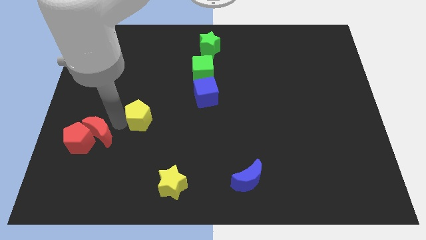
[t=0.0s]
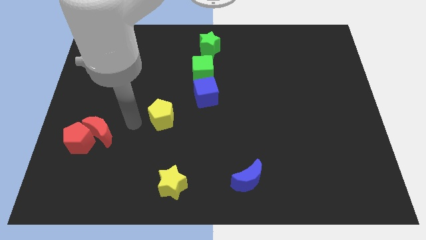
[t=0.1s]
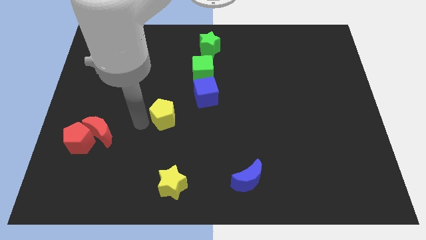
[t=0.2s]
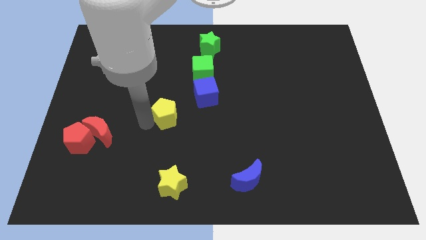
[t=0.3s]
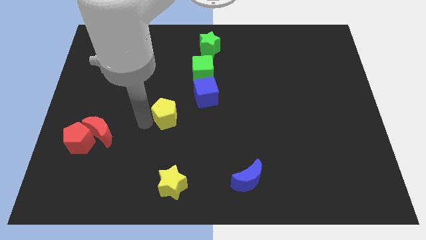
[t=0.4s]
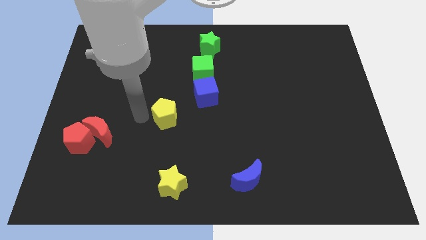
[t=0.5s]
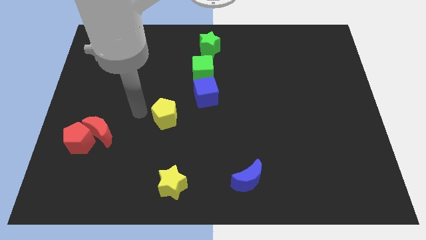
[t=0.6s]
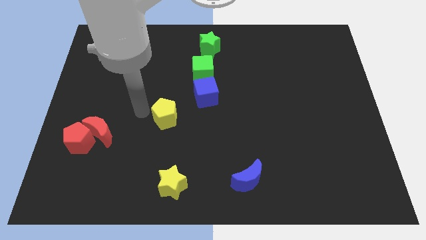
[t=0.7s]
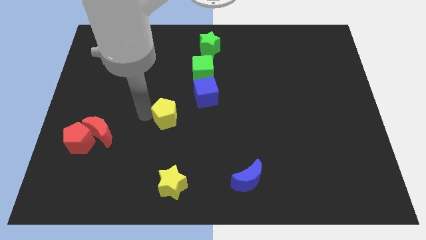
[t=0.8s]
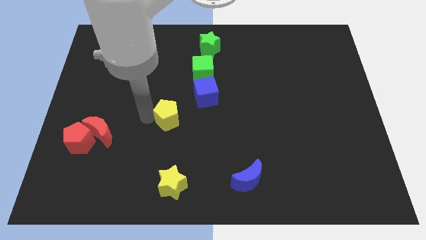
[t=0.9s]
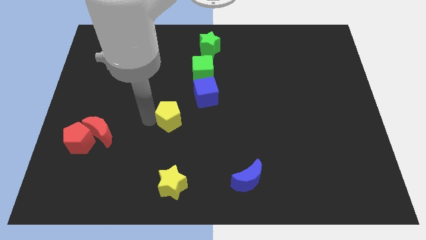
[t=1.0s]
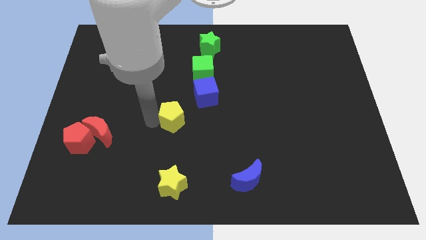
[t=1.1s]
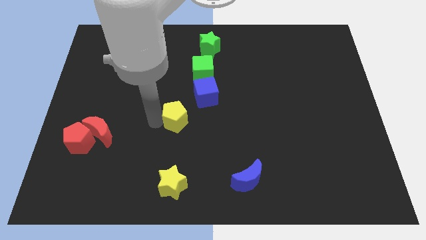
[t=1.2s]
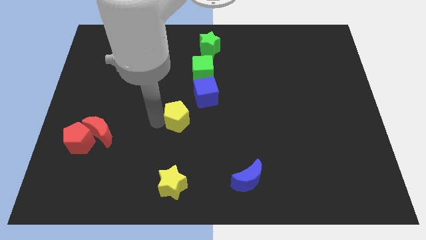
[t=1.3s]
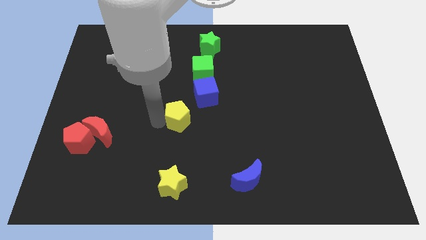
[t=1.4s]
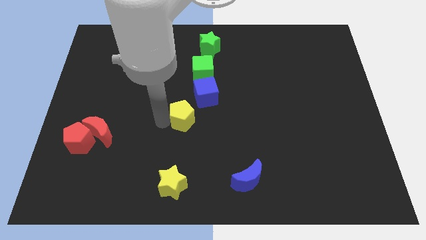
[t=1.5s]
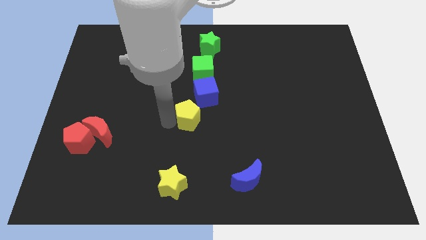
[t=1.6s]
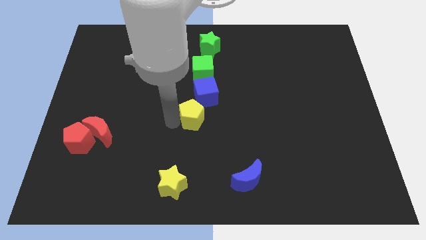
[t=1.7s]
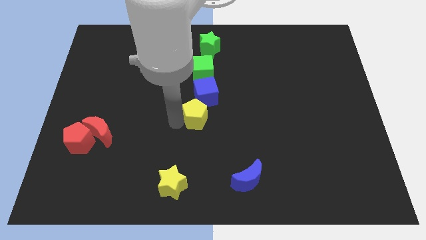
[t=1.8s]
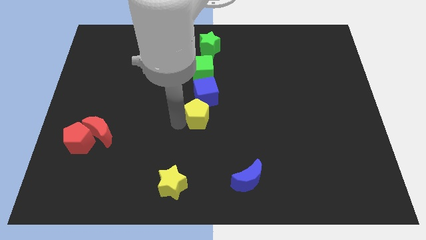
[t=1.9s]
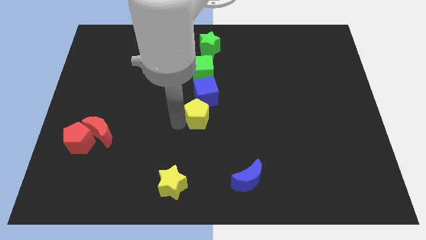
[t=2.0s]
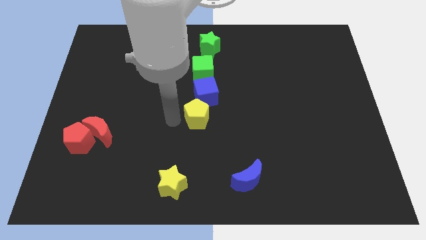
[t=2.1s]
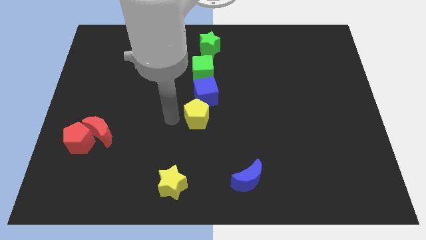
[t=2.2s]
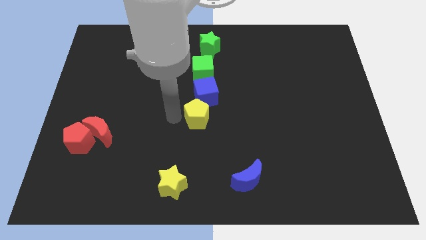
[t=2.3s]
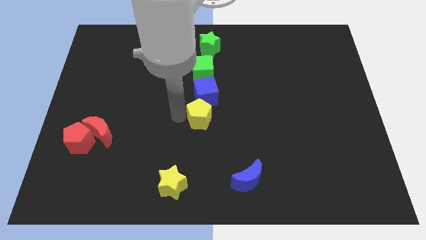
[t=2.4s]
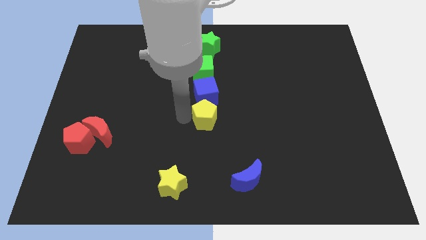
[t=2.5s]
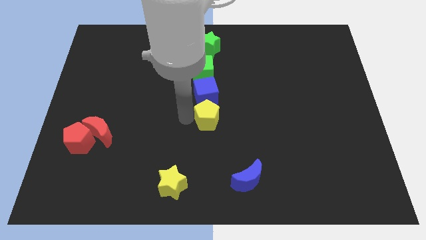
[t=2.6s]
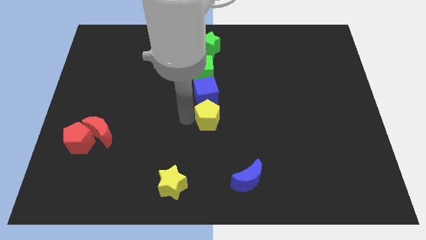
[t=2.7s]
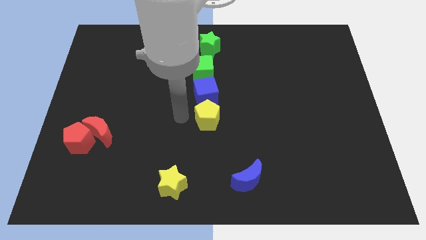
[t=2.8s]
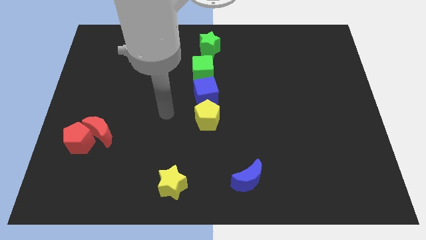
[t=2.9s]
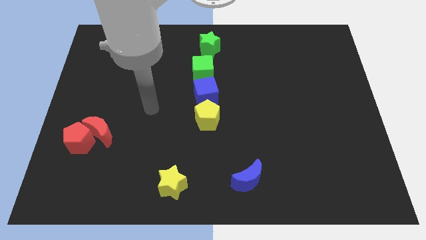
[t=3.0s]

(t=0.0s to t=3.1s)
move the yellow pentagon below the blue cube

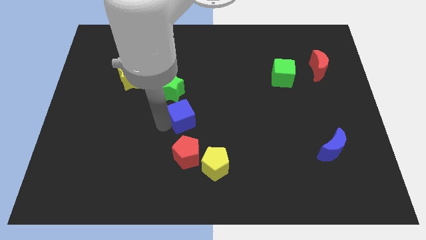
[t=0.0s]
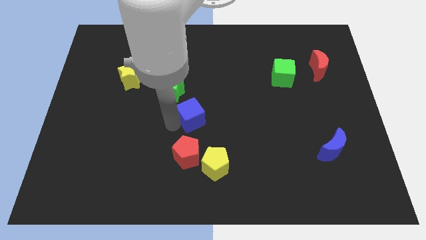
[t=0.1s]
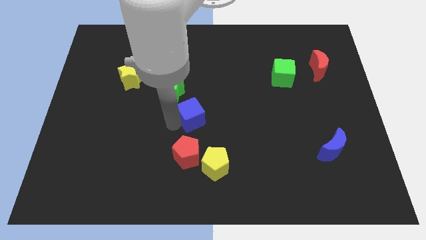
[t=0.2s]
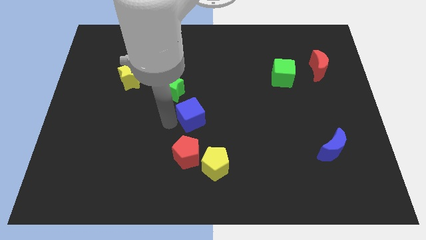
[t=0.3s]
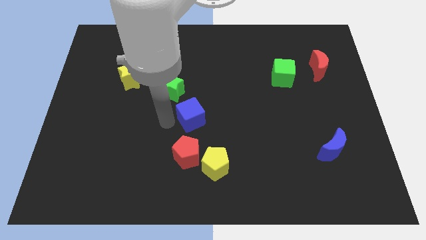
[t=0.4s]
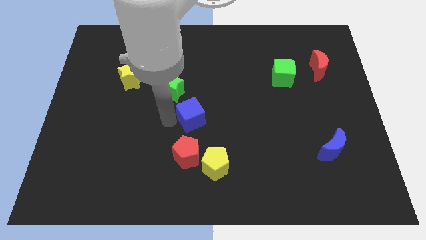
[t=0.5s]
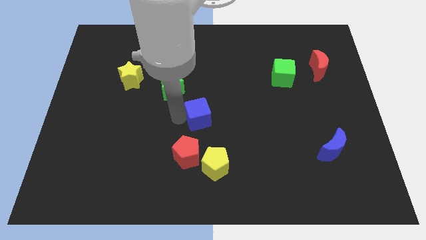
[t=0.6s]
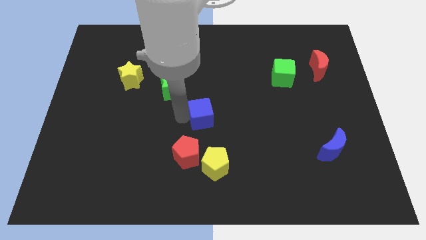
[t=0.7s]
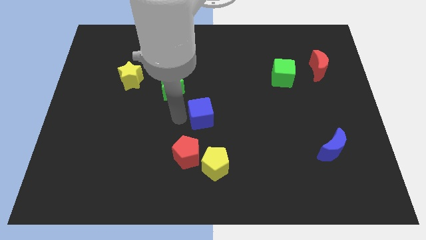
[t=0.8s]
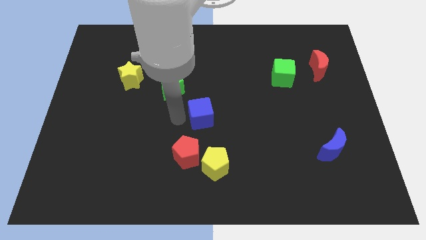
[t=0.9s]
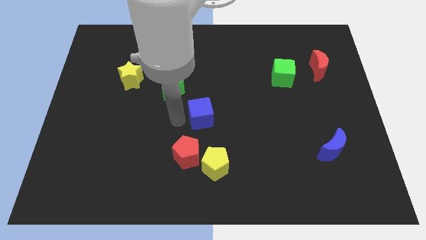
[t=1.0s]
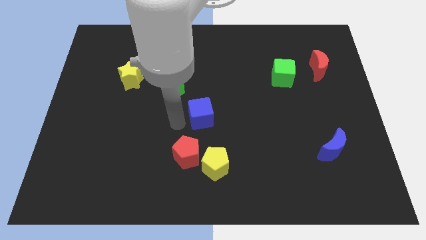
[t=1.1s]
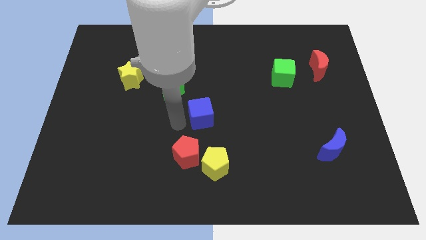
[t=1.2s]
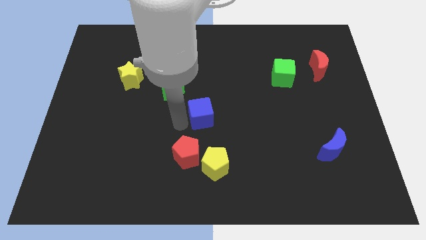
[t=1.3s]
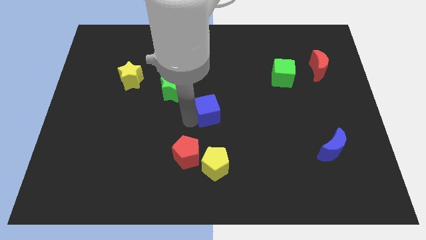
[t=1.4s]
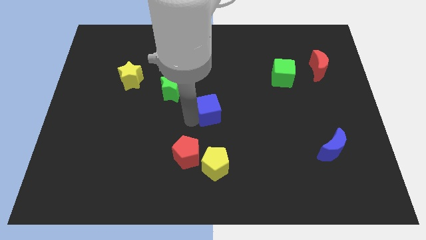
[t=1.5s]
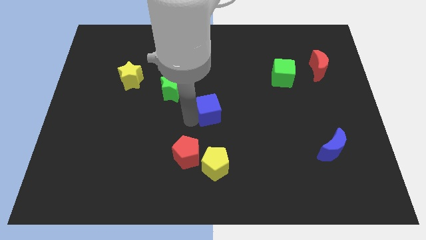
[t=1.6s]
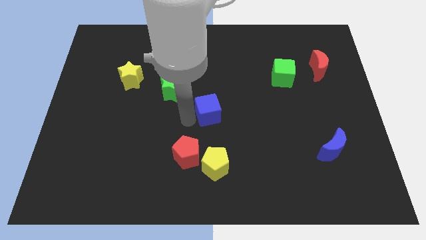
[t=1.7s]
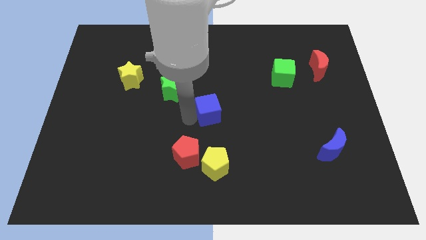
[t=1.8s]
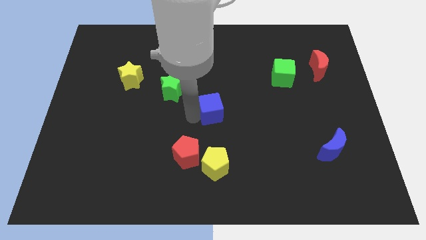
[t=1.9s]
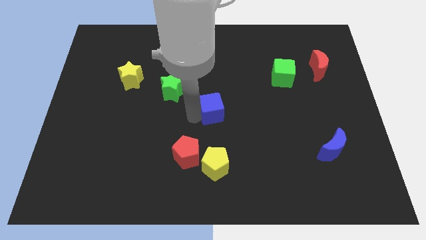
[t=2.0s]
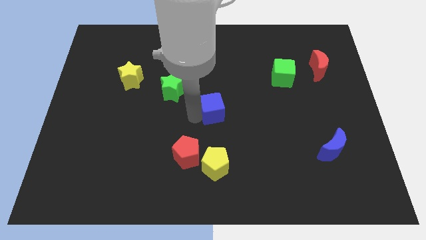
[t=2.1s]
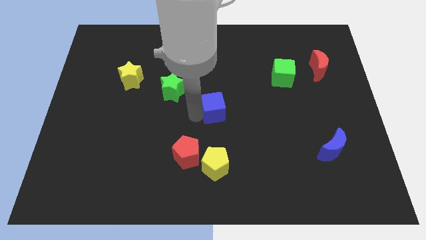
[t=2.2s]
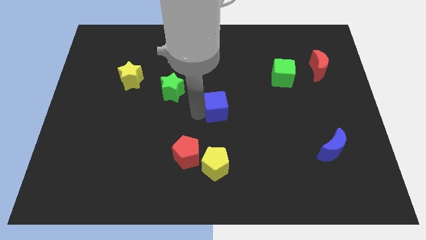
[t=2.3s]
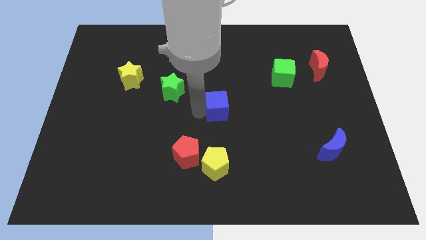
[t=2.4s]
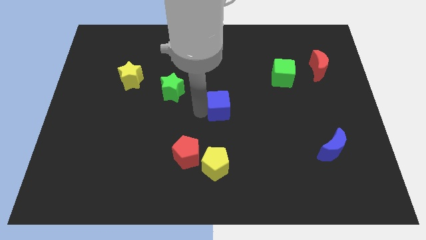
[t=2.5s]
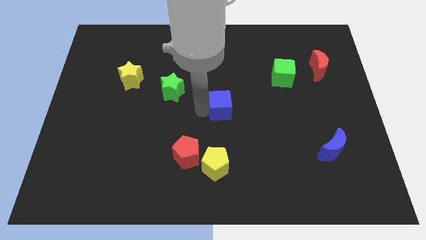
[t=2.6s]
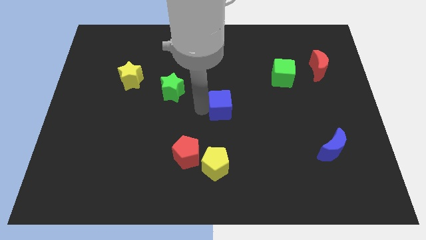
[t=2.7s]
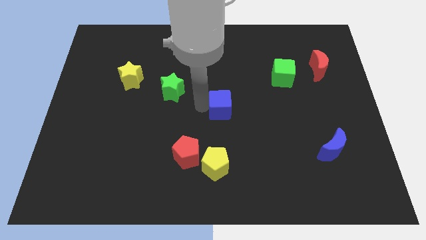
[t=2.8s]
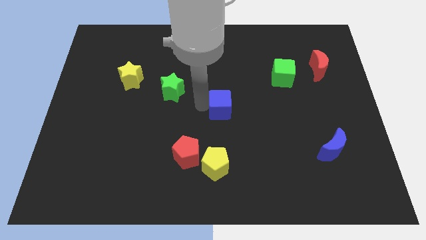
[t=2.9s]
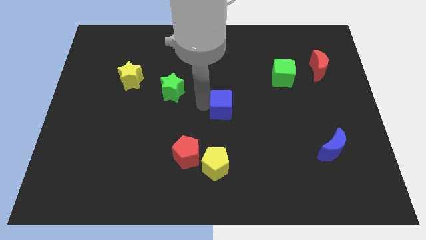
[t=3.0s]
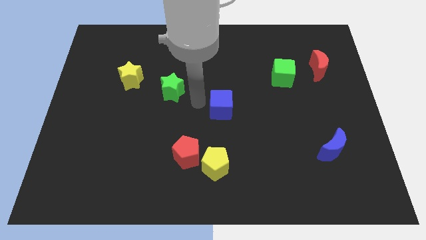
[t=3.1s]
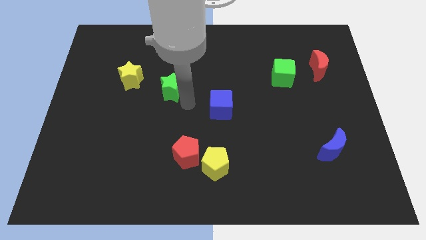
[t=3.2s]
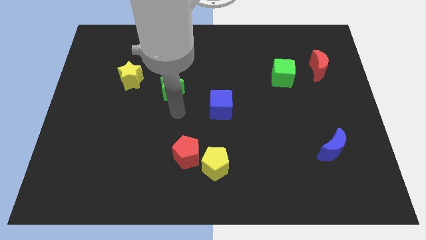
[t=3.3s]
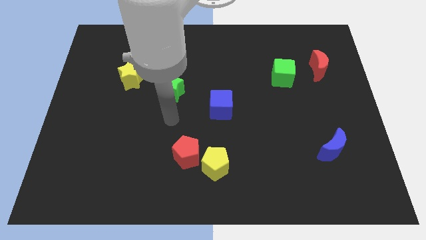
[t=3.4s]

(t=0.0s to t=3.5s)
push the blue cube to the right of the green star

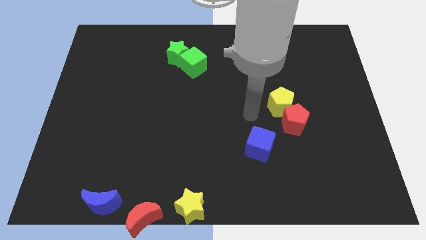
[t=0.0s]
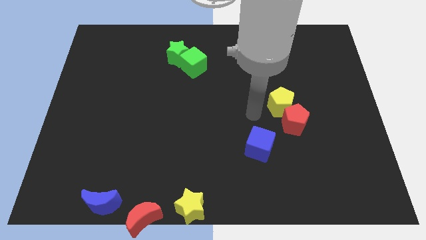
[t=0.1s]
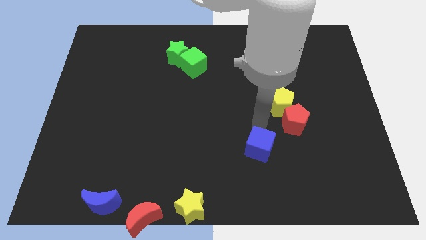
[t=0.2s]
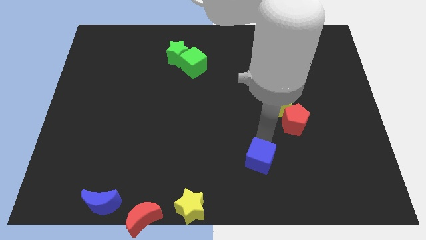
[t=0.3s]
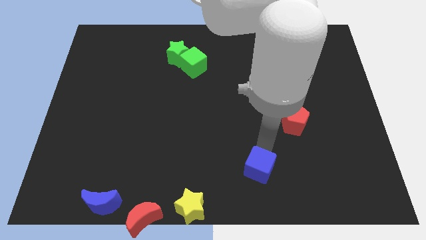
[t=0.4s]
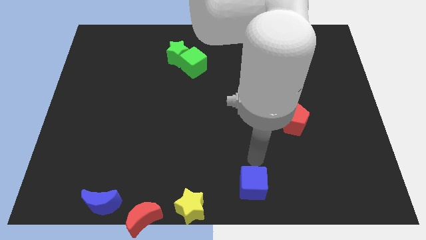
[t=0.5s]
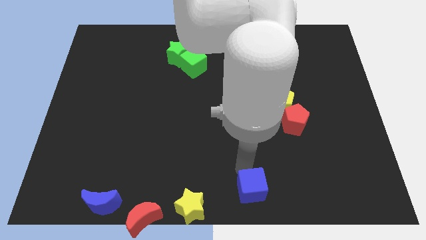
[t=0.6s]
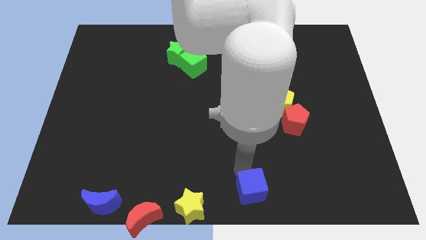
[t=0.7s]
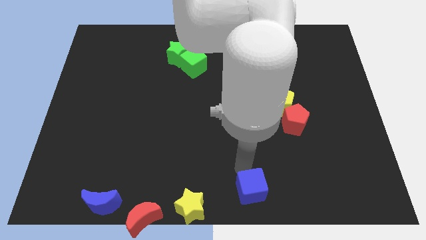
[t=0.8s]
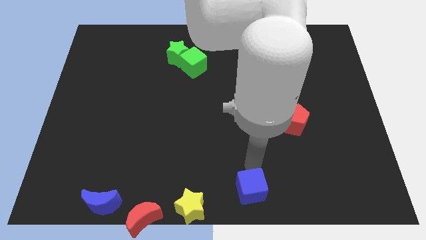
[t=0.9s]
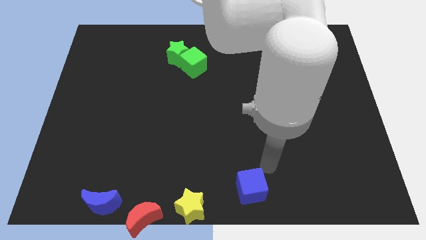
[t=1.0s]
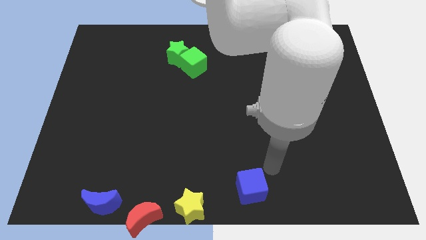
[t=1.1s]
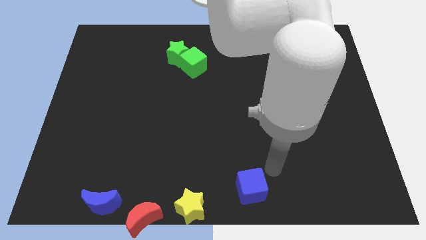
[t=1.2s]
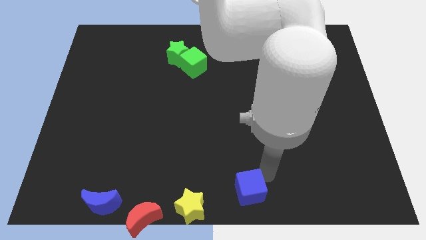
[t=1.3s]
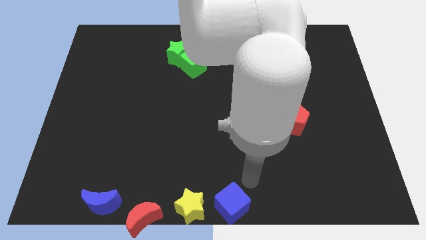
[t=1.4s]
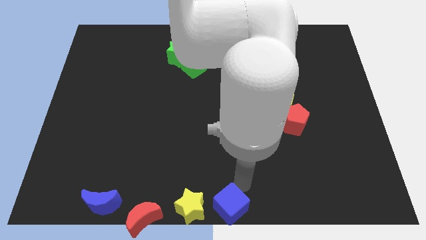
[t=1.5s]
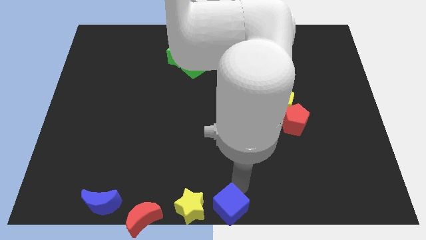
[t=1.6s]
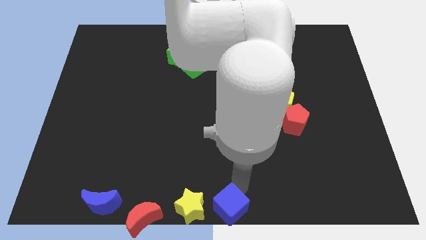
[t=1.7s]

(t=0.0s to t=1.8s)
place the blue cube to the right side of the yellow star

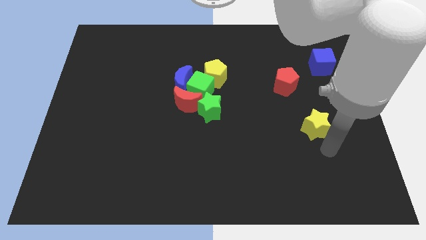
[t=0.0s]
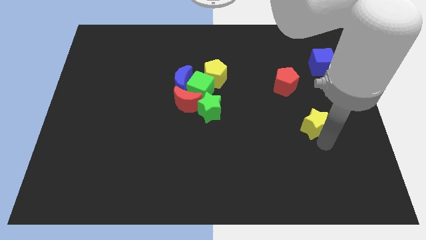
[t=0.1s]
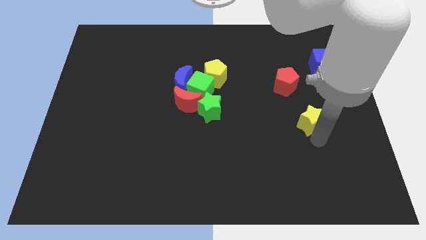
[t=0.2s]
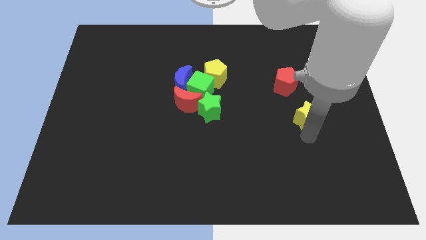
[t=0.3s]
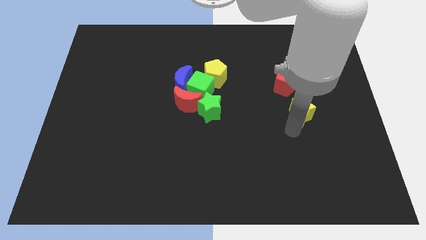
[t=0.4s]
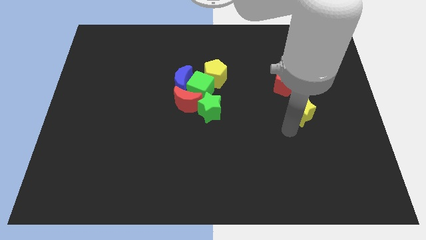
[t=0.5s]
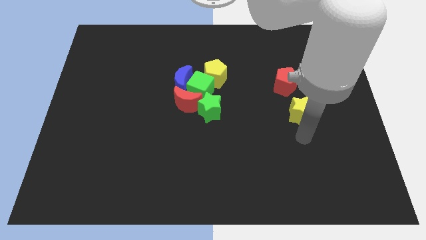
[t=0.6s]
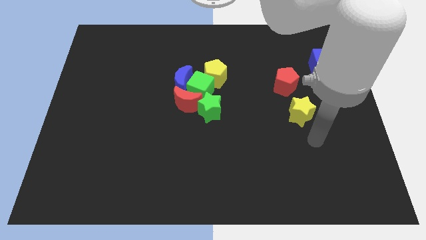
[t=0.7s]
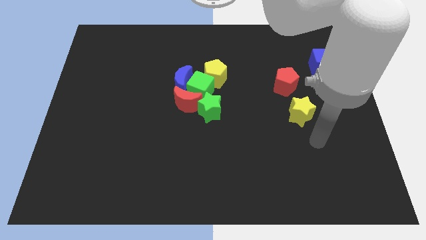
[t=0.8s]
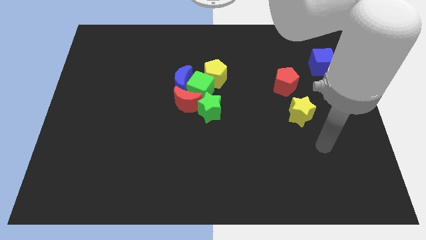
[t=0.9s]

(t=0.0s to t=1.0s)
push the yellow star towards the red pentagon
